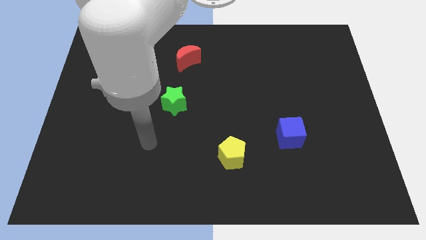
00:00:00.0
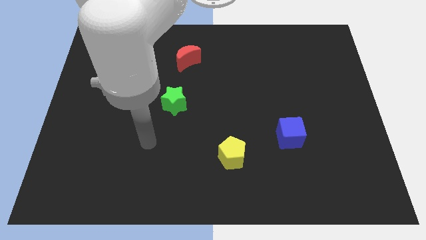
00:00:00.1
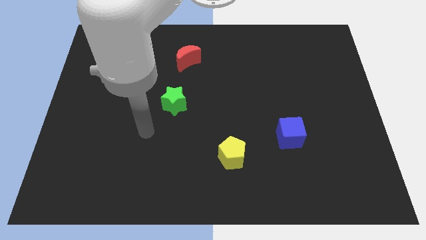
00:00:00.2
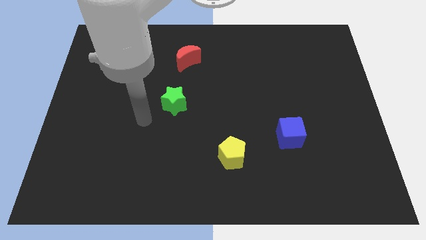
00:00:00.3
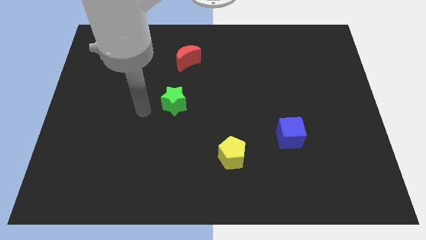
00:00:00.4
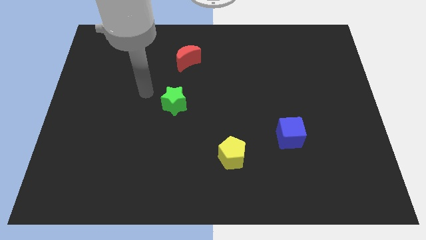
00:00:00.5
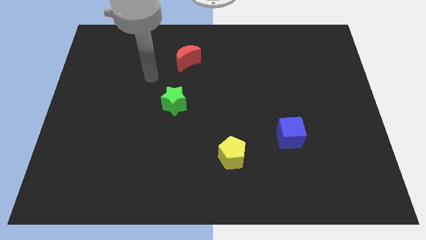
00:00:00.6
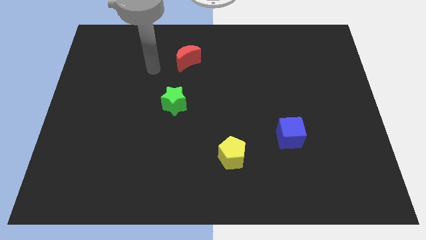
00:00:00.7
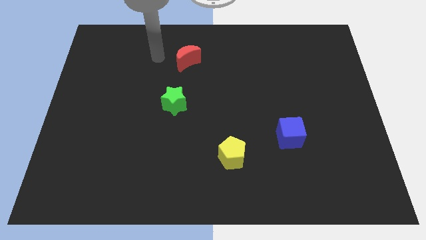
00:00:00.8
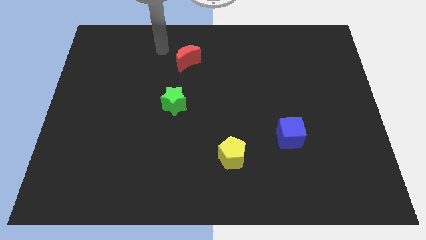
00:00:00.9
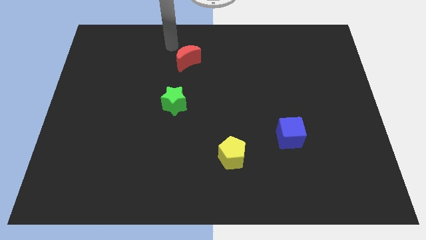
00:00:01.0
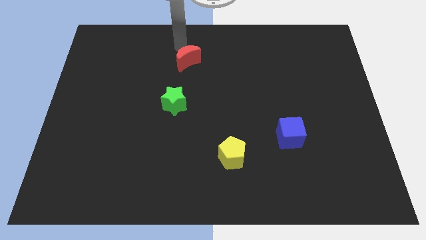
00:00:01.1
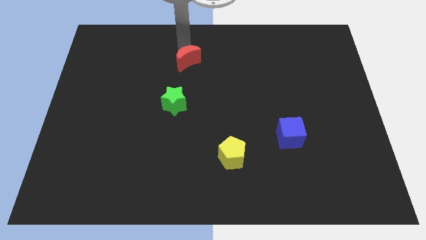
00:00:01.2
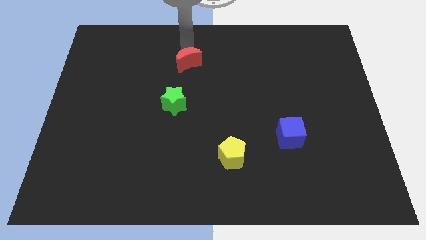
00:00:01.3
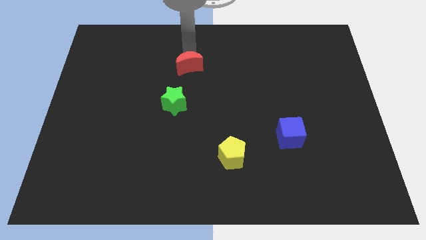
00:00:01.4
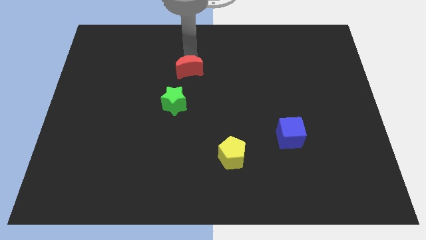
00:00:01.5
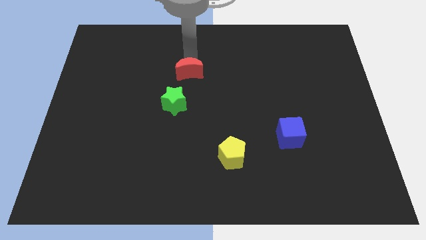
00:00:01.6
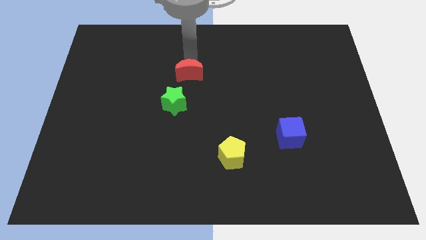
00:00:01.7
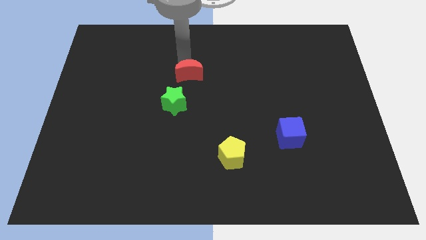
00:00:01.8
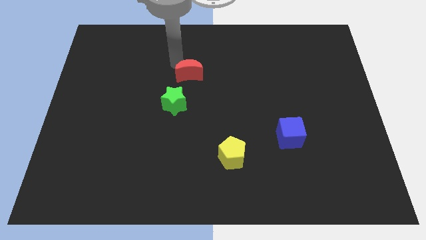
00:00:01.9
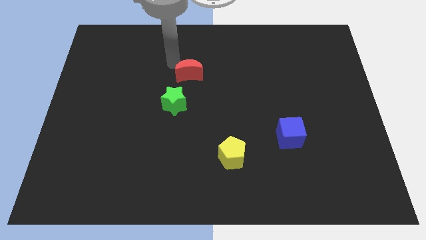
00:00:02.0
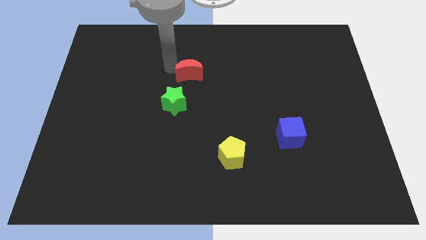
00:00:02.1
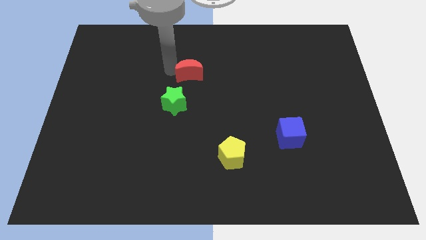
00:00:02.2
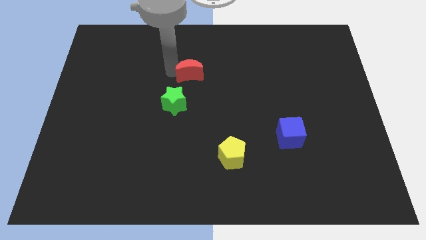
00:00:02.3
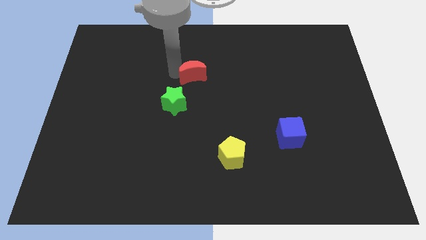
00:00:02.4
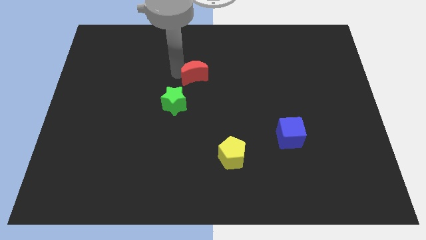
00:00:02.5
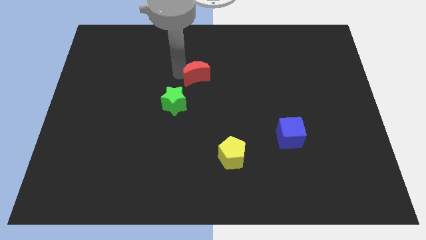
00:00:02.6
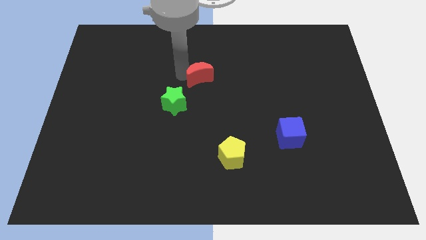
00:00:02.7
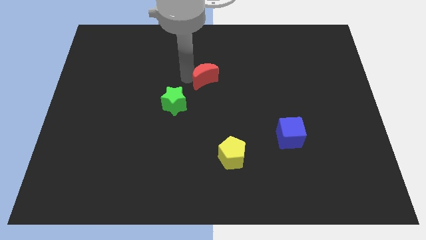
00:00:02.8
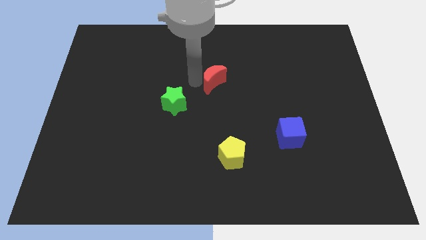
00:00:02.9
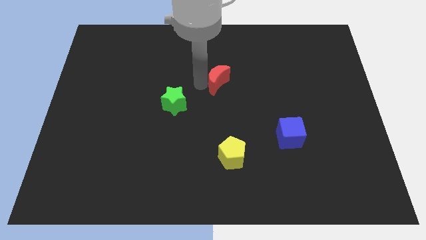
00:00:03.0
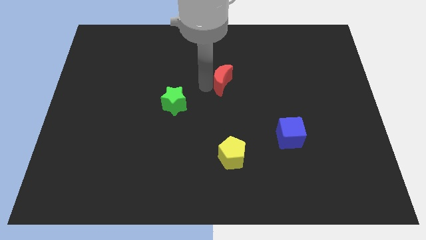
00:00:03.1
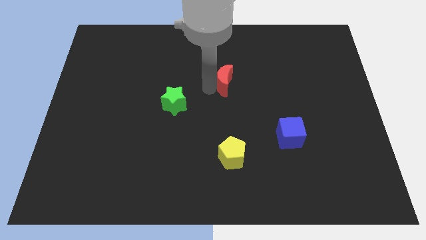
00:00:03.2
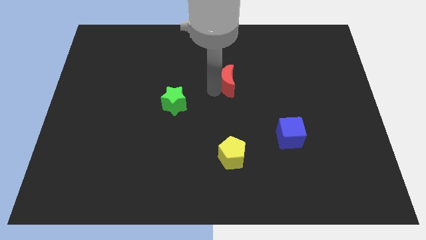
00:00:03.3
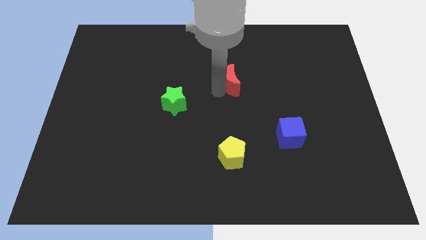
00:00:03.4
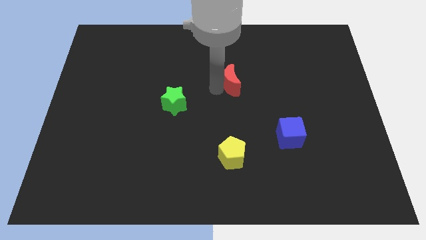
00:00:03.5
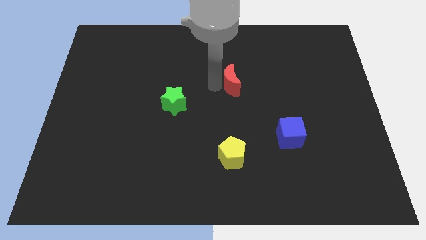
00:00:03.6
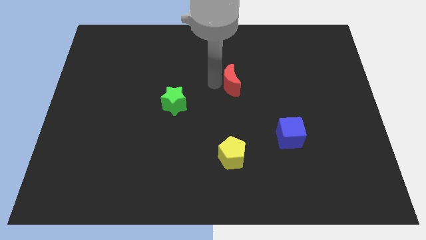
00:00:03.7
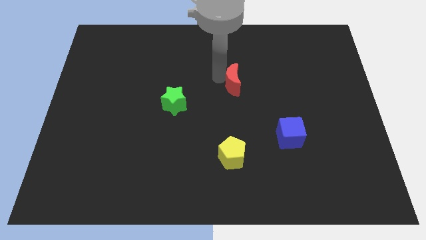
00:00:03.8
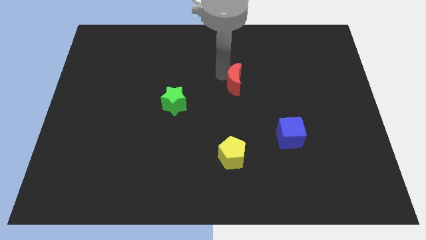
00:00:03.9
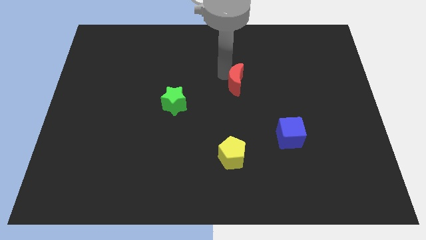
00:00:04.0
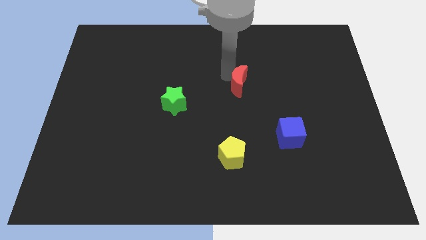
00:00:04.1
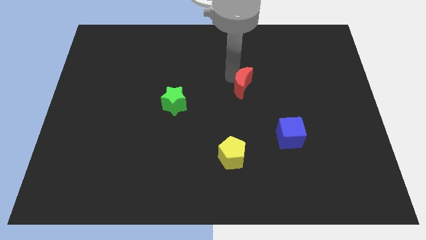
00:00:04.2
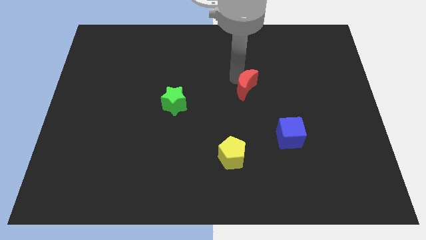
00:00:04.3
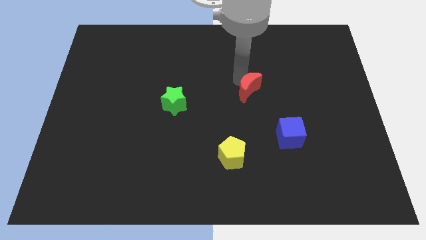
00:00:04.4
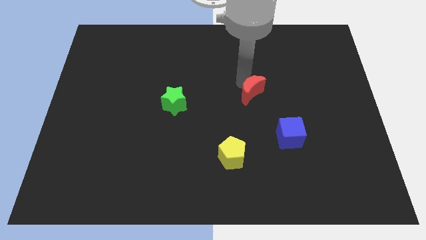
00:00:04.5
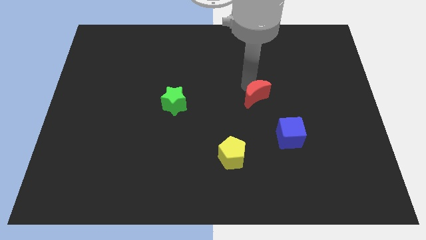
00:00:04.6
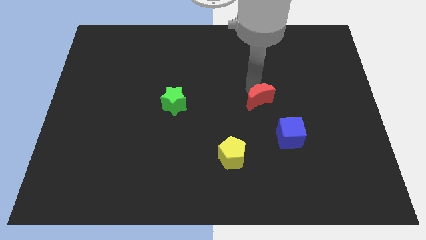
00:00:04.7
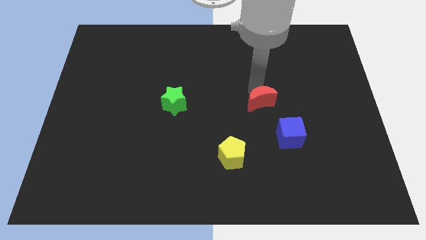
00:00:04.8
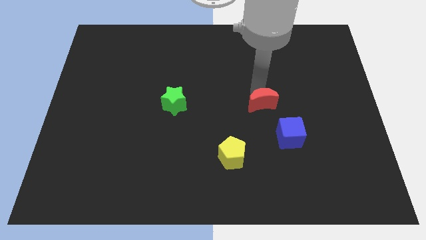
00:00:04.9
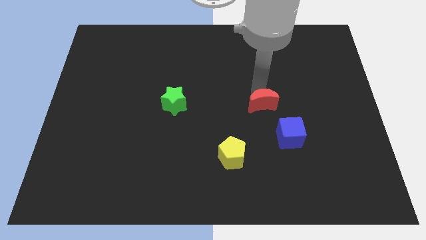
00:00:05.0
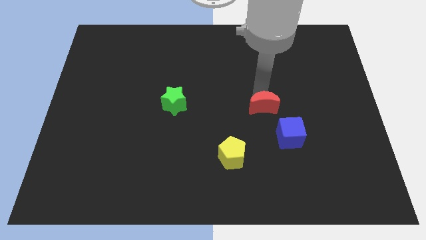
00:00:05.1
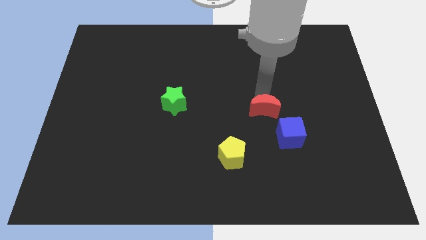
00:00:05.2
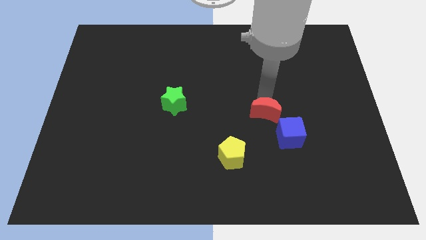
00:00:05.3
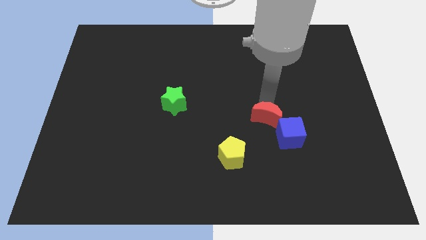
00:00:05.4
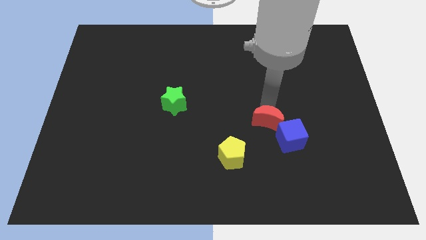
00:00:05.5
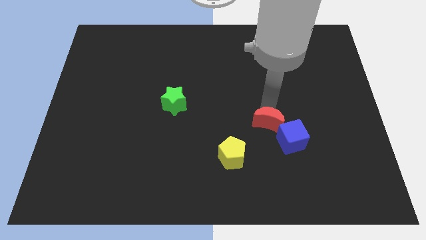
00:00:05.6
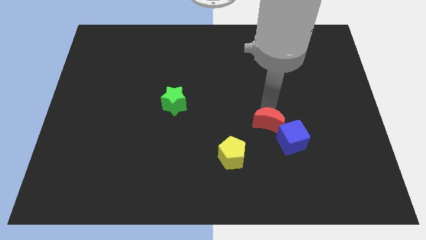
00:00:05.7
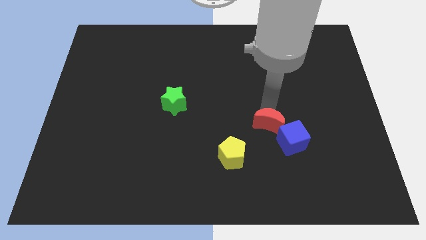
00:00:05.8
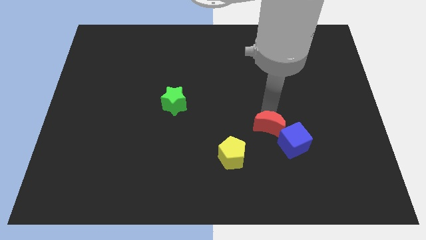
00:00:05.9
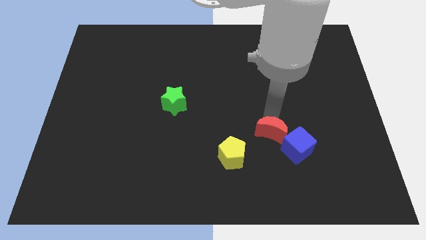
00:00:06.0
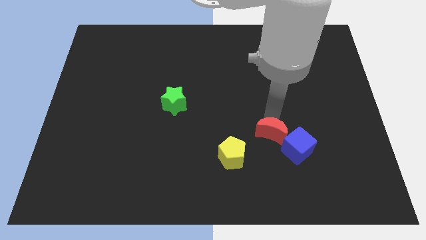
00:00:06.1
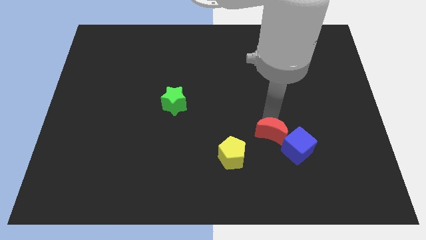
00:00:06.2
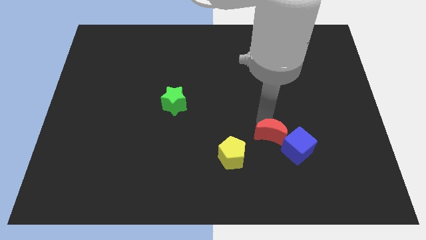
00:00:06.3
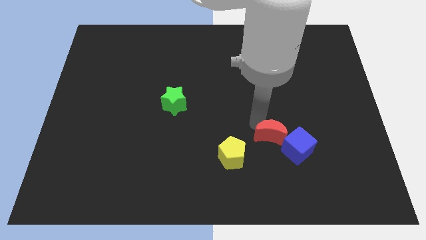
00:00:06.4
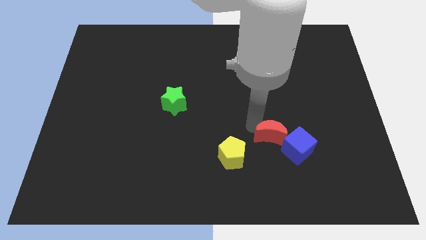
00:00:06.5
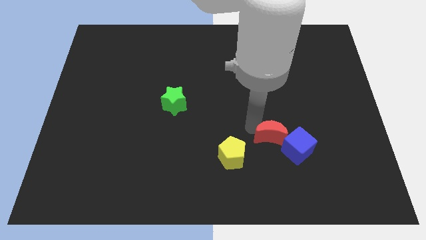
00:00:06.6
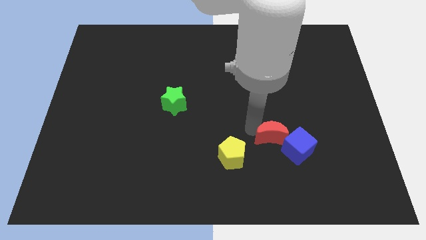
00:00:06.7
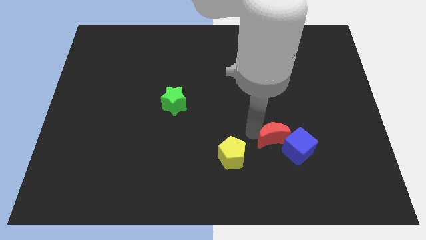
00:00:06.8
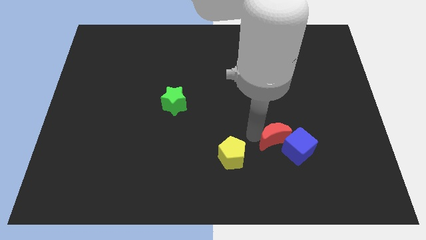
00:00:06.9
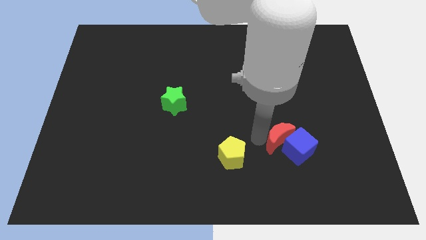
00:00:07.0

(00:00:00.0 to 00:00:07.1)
slide the red moon to the blue block

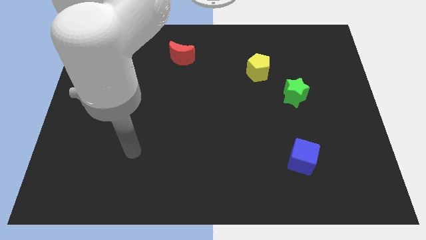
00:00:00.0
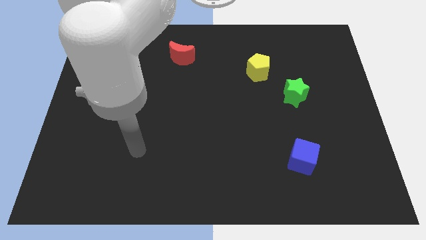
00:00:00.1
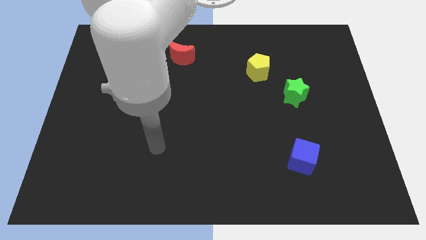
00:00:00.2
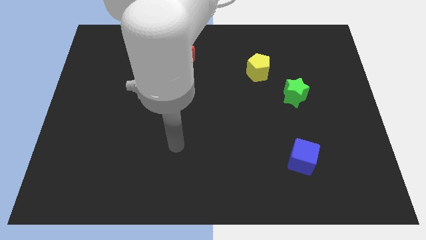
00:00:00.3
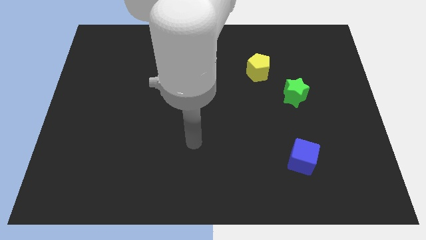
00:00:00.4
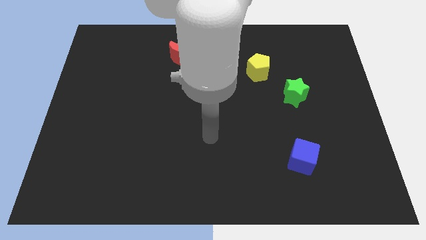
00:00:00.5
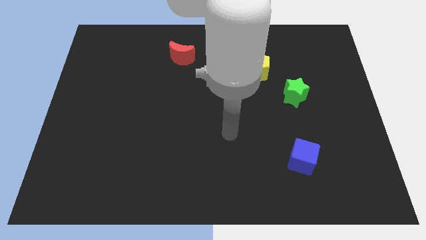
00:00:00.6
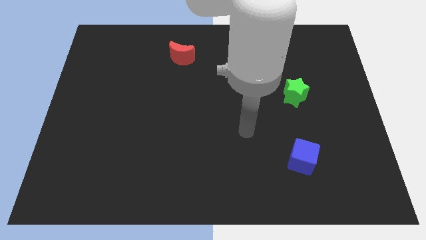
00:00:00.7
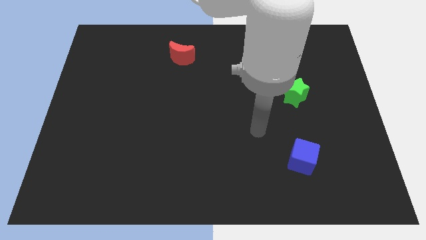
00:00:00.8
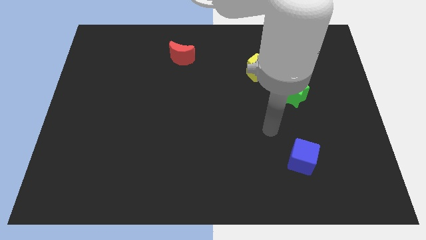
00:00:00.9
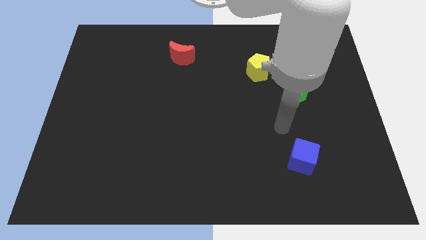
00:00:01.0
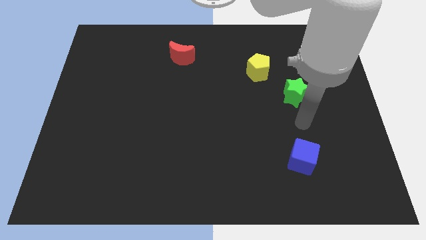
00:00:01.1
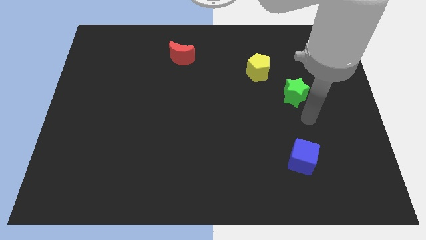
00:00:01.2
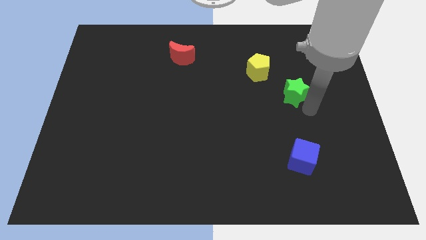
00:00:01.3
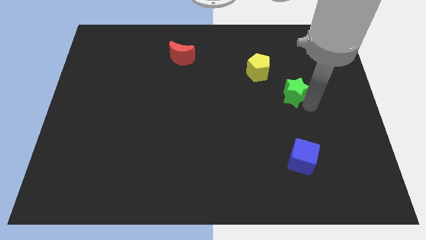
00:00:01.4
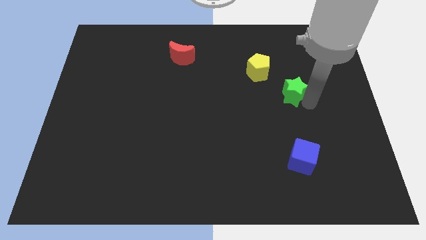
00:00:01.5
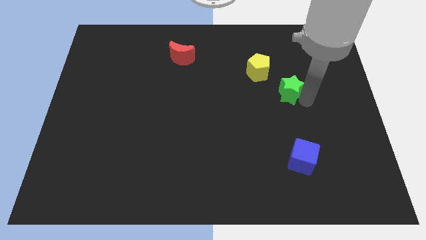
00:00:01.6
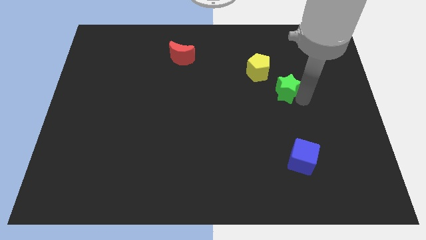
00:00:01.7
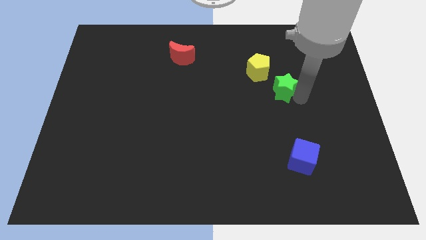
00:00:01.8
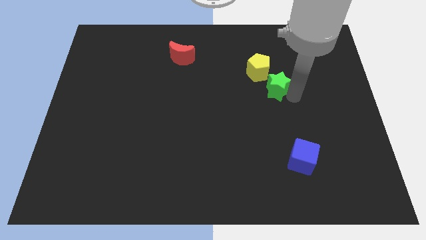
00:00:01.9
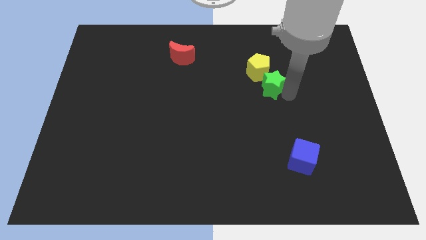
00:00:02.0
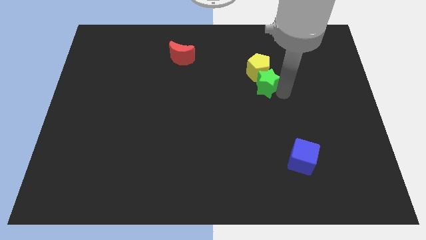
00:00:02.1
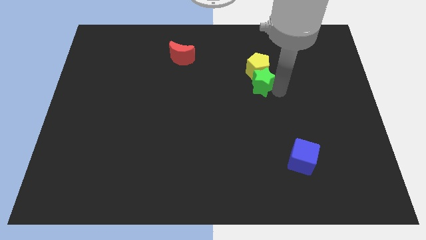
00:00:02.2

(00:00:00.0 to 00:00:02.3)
push the green star towards the yellow pentagon
